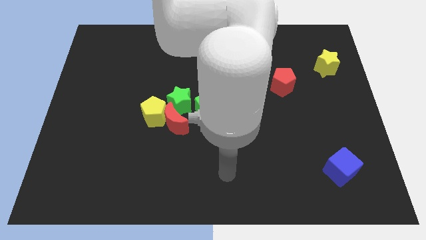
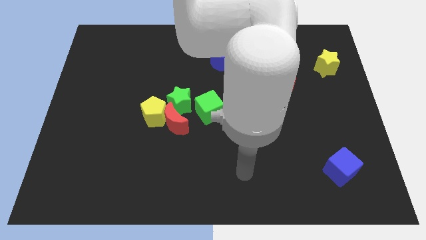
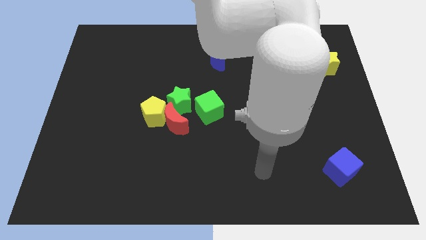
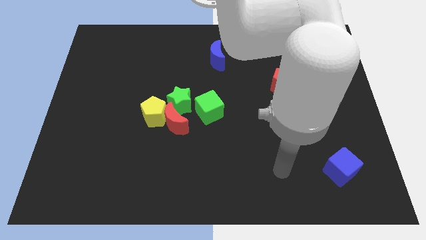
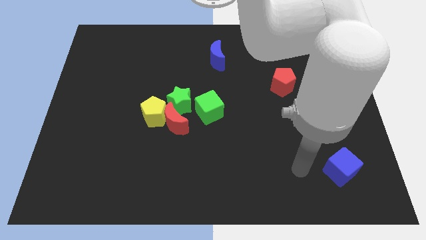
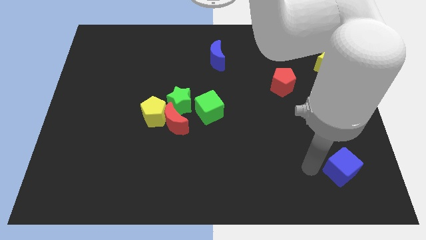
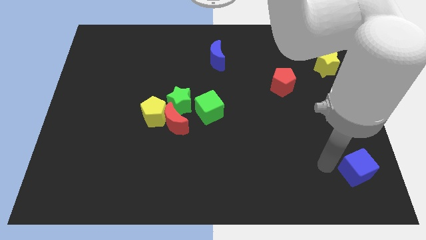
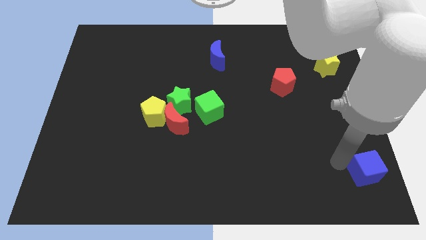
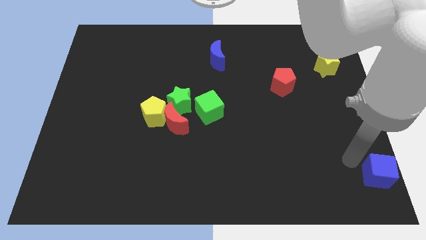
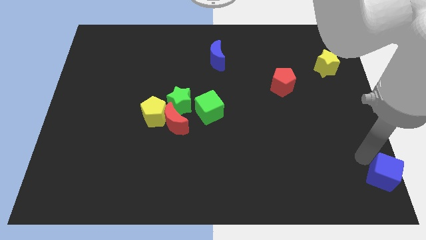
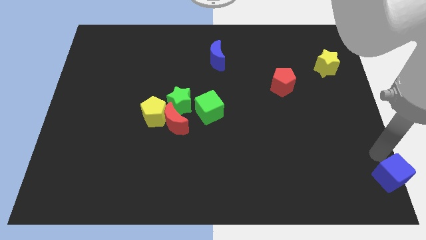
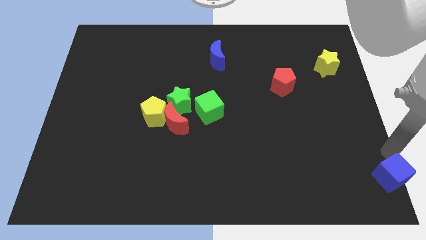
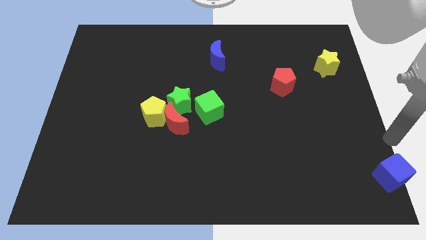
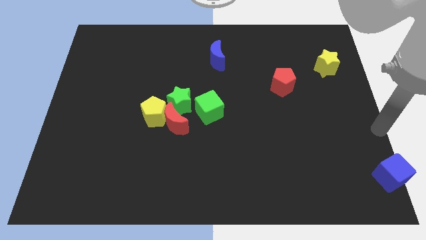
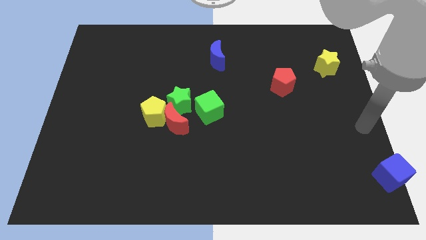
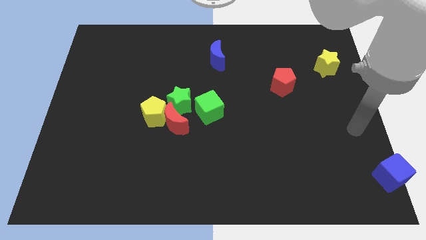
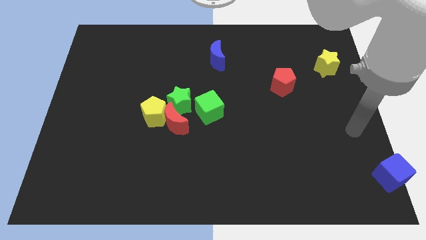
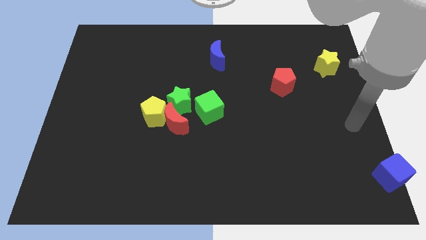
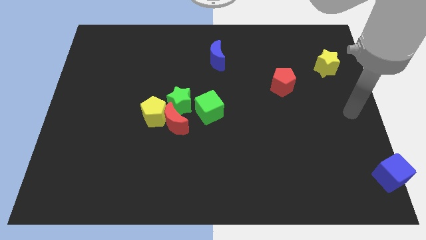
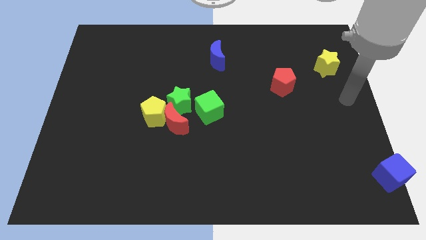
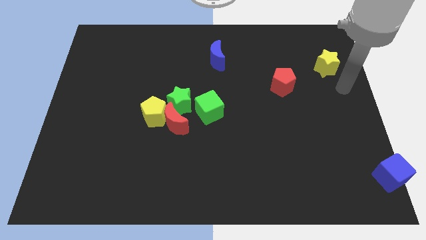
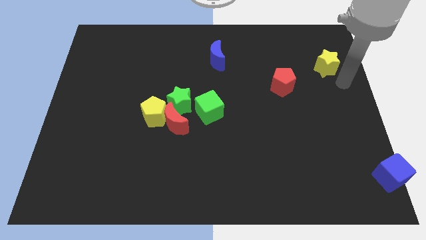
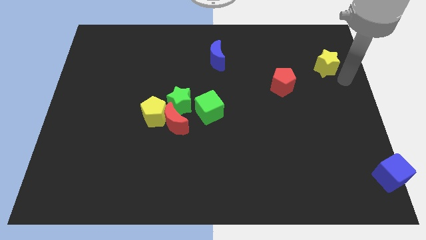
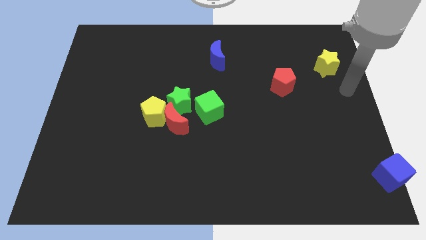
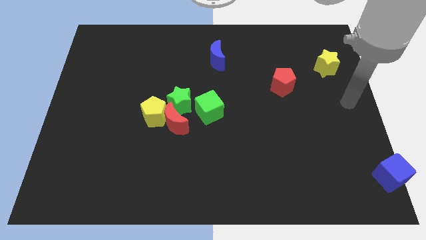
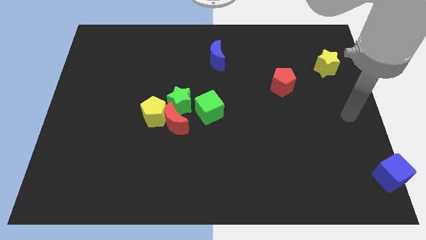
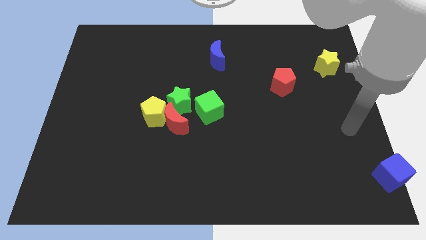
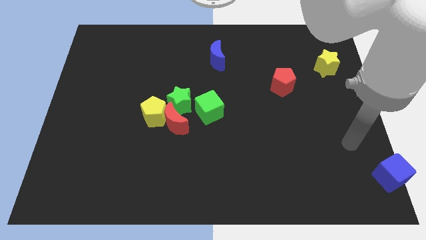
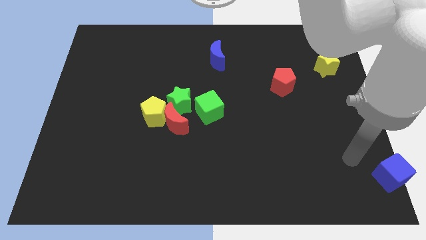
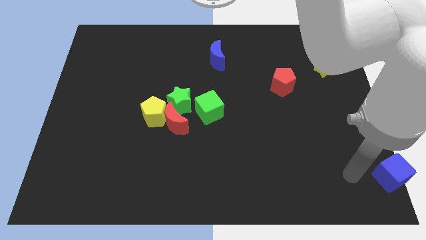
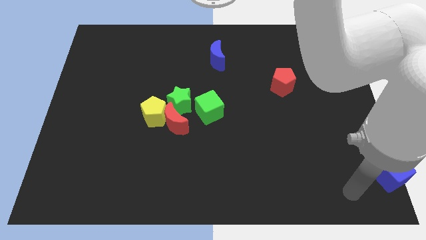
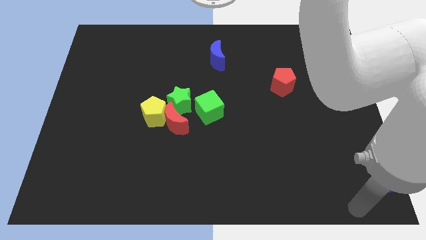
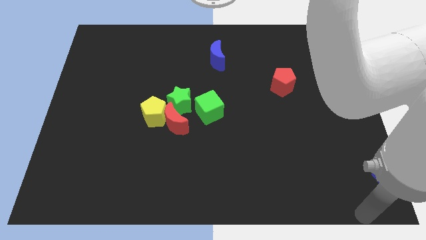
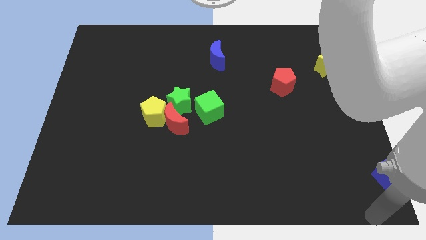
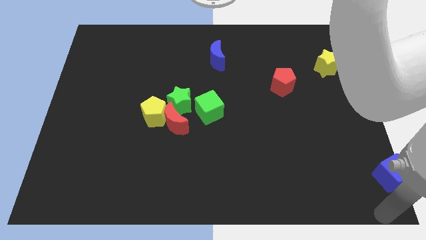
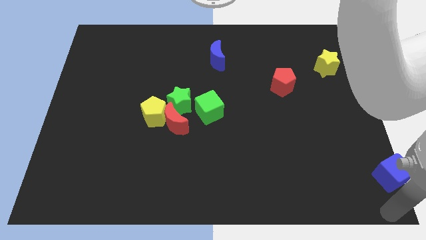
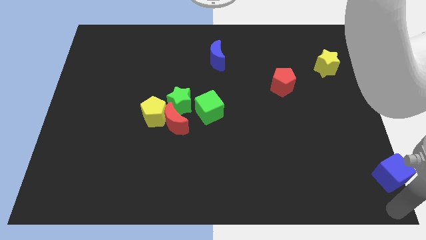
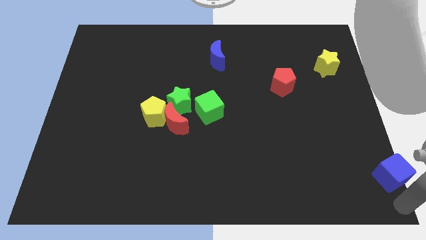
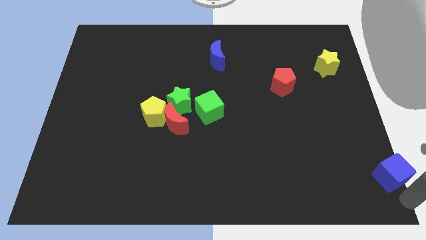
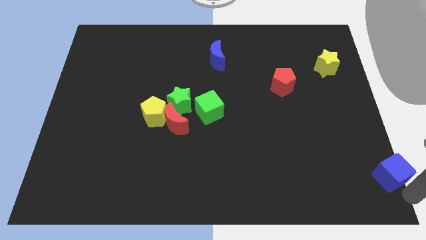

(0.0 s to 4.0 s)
push the blue cube towards the bottom right of the board

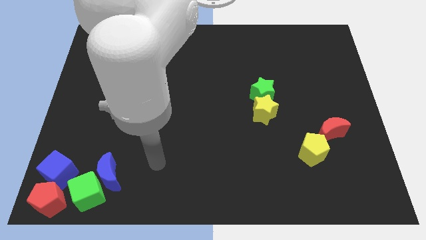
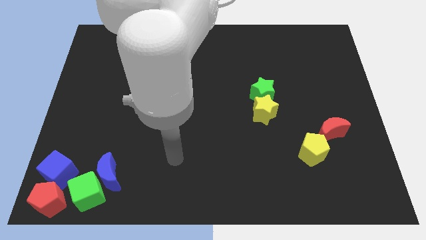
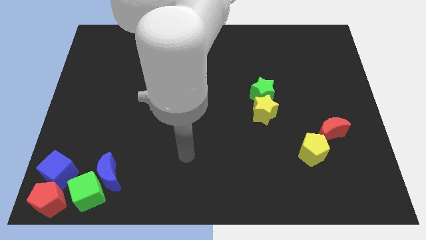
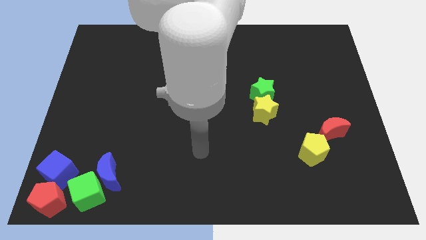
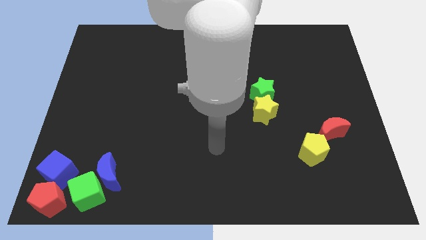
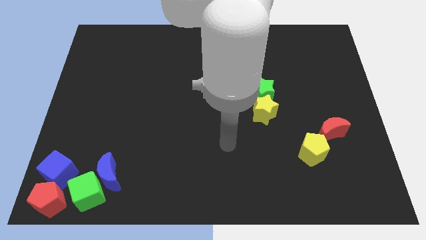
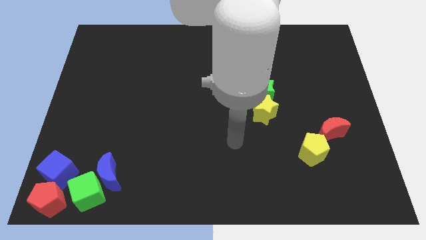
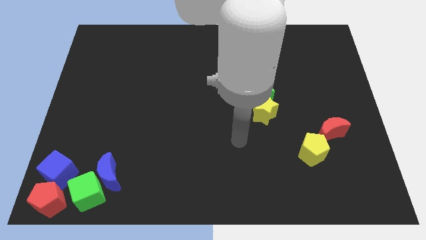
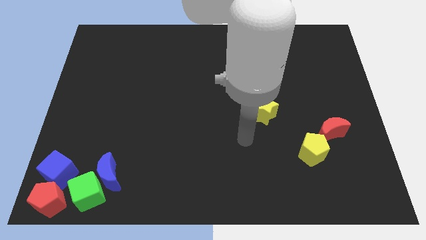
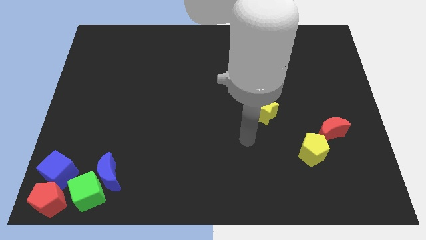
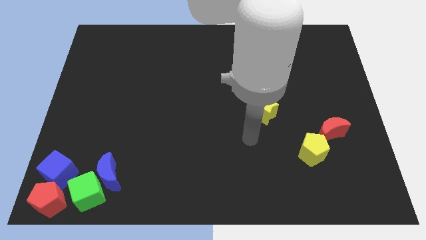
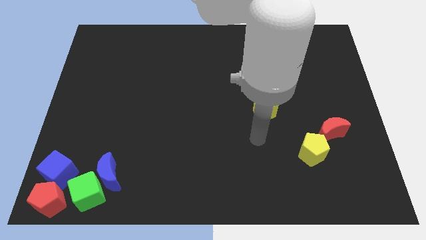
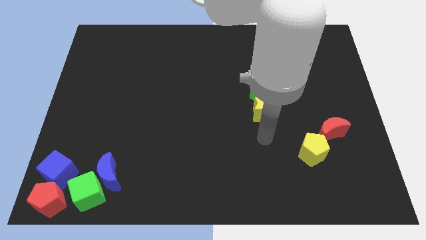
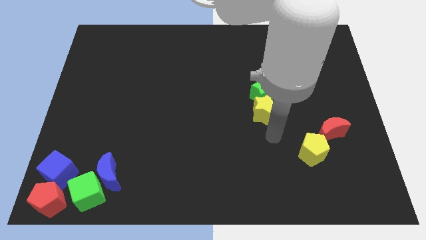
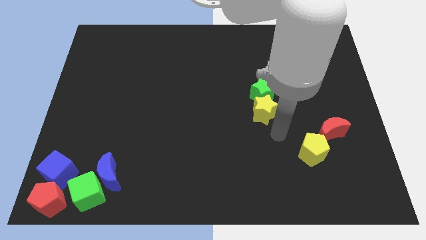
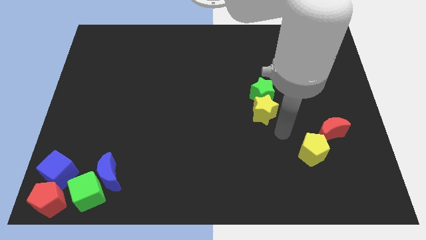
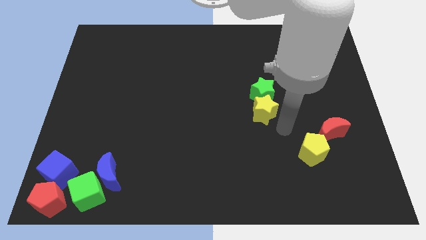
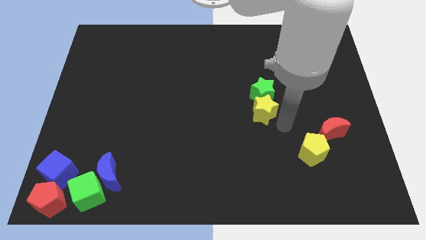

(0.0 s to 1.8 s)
move the arm diagonally to the yellow star

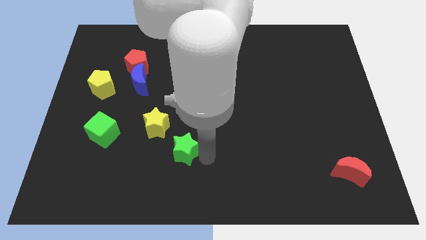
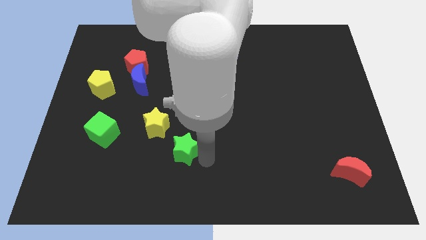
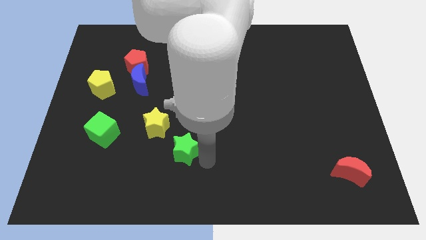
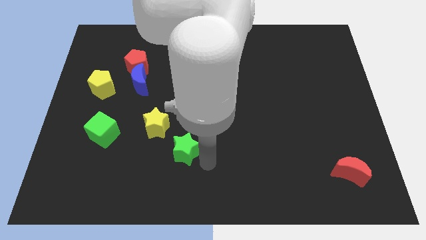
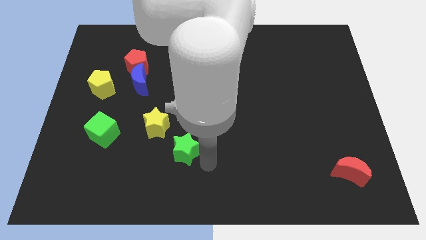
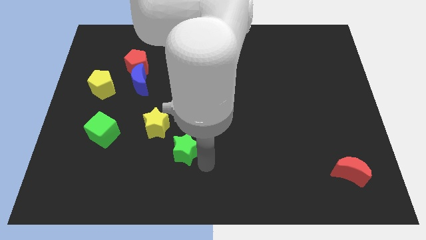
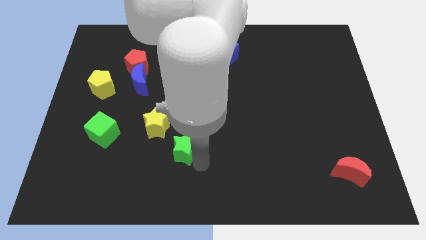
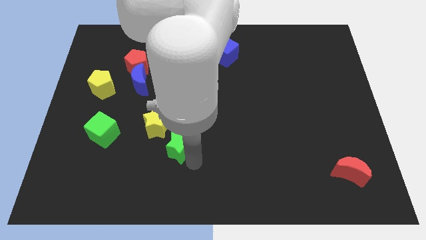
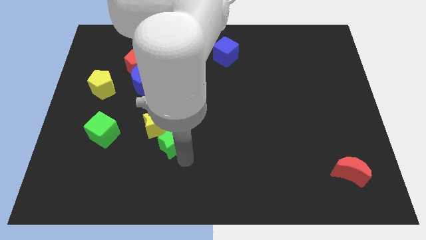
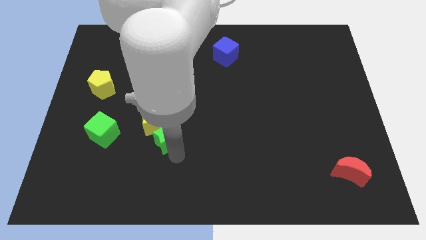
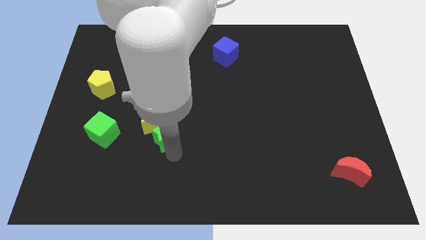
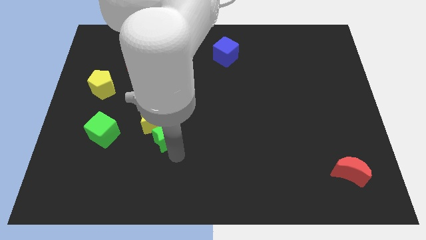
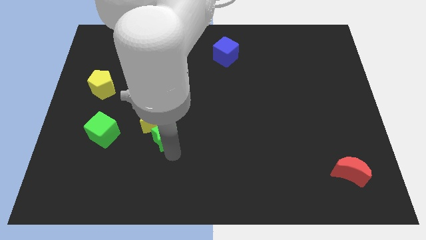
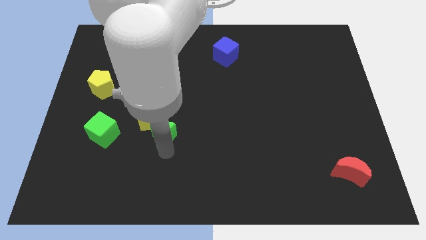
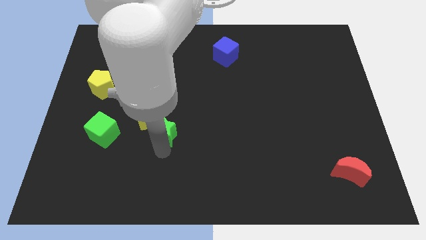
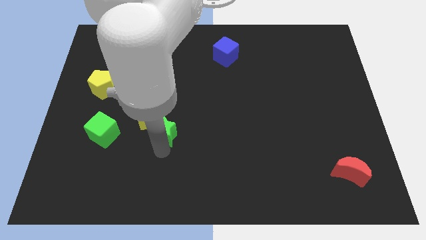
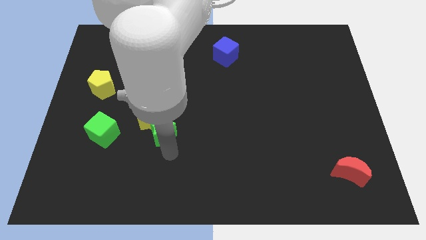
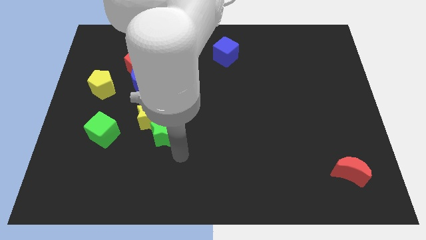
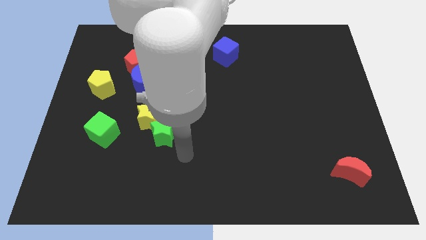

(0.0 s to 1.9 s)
push the green star into yellow star

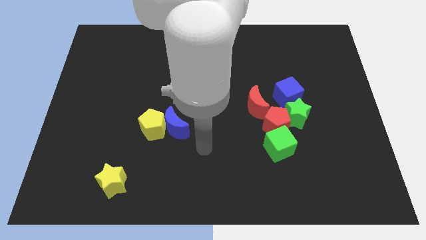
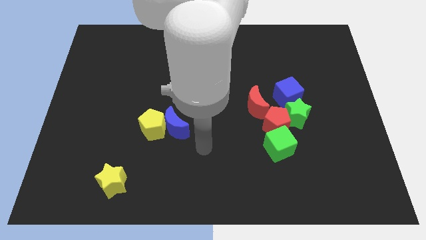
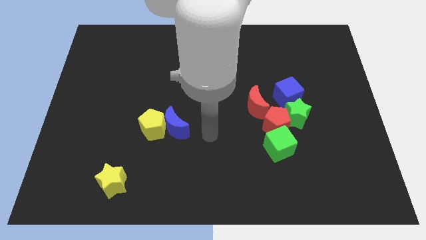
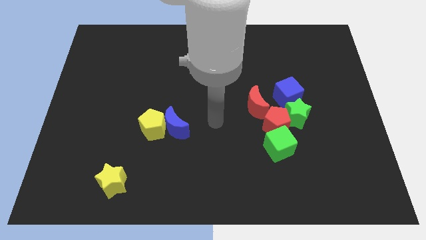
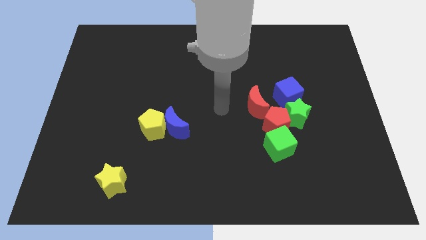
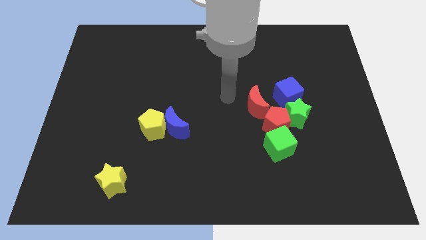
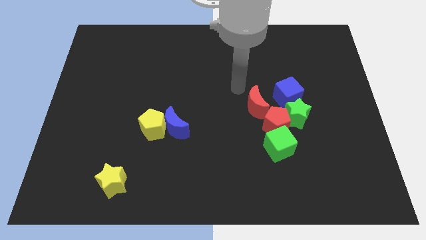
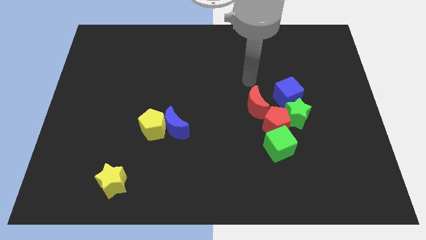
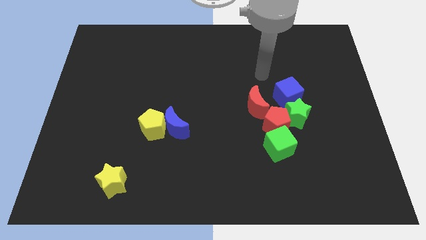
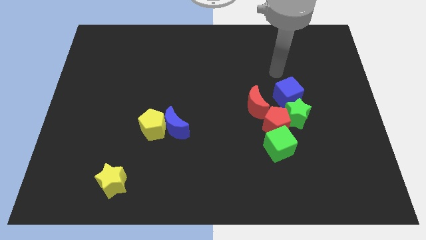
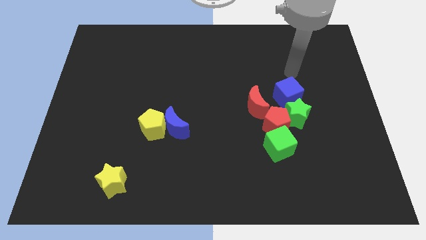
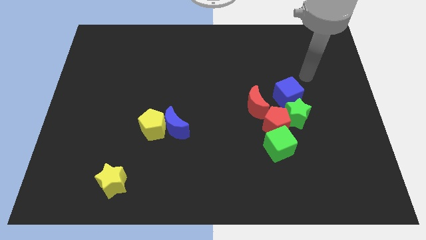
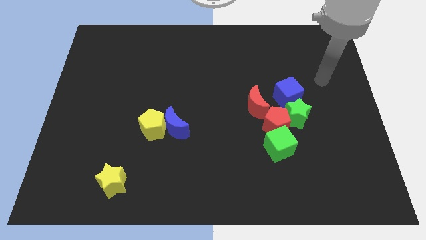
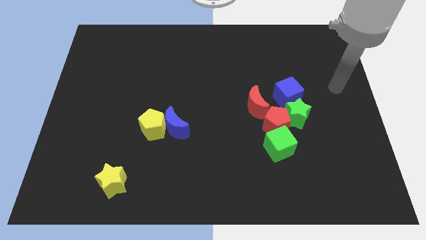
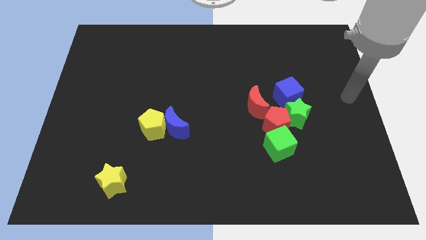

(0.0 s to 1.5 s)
move away from the blue moon
